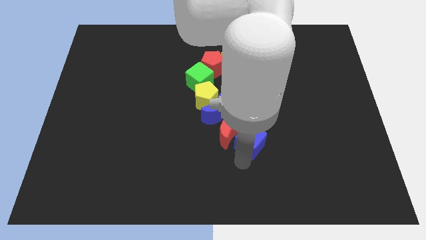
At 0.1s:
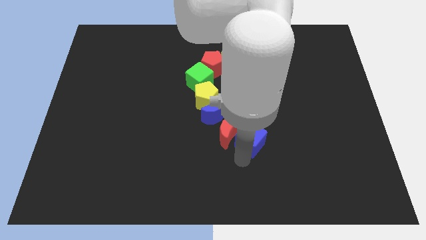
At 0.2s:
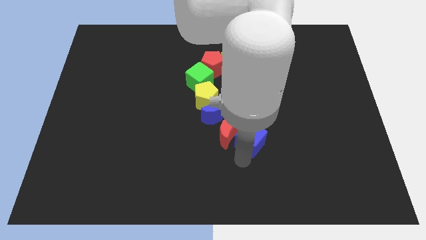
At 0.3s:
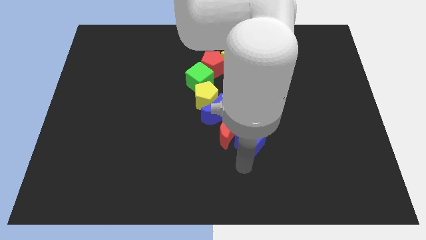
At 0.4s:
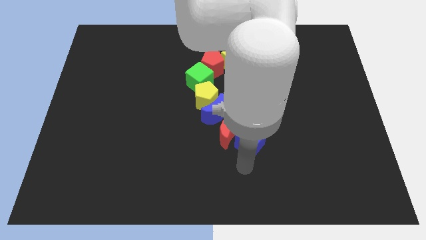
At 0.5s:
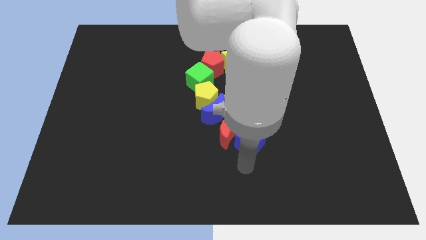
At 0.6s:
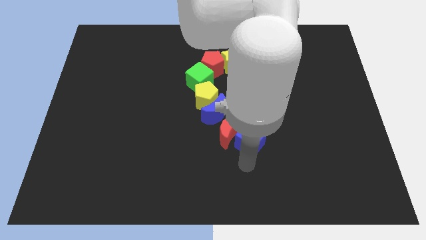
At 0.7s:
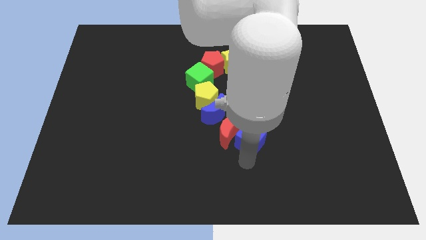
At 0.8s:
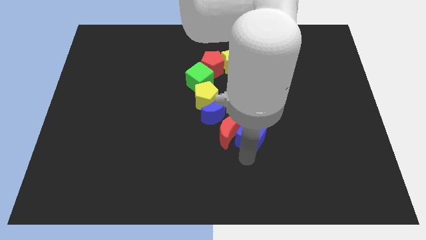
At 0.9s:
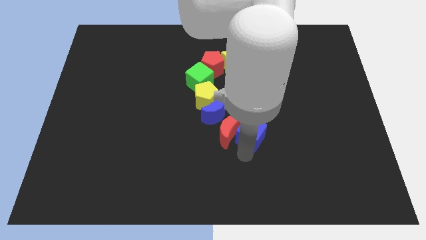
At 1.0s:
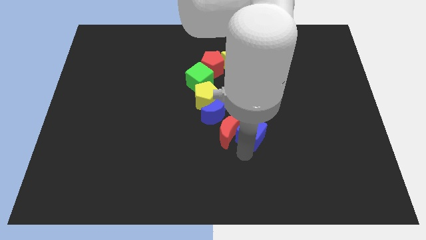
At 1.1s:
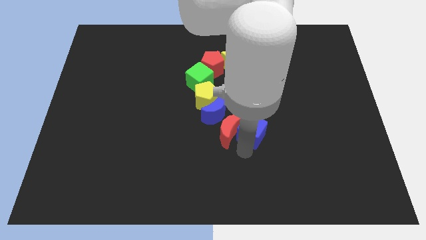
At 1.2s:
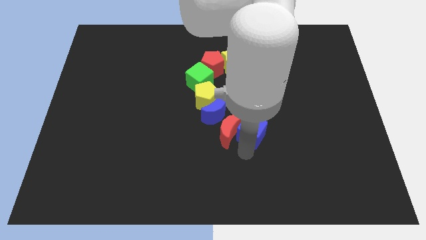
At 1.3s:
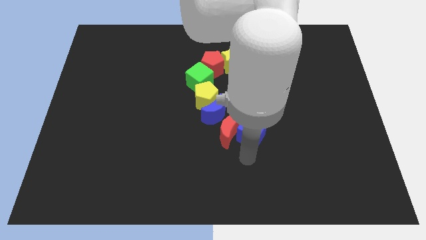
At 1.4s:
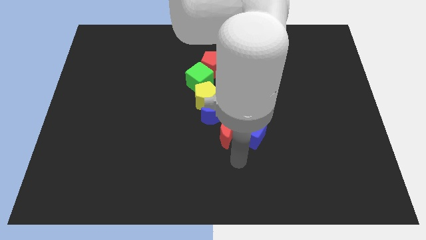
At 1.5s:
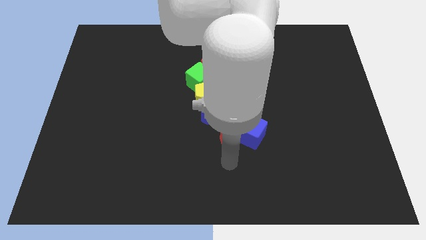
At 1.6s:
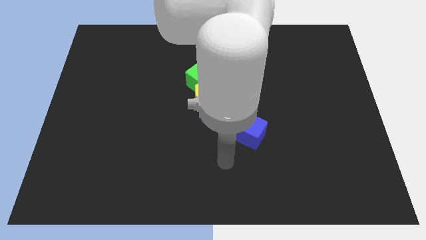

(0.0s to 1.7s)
slightly push the blue cube towards the top side

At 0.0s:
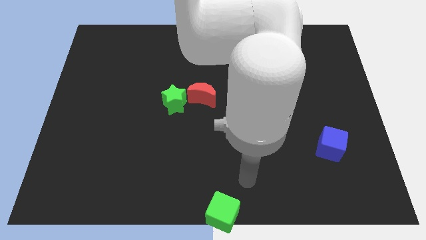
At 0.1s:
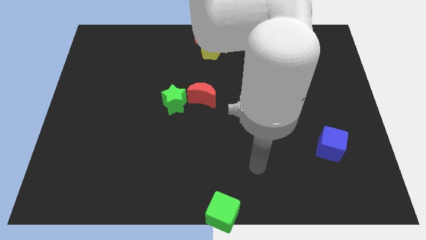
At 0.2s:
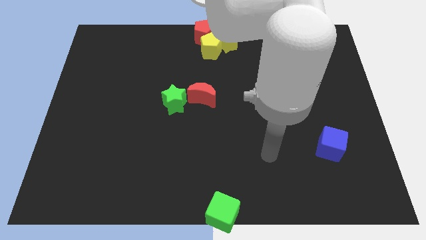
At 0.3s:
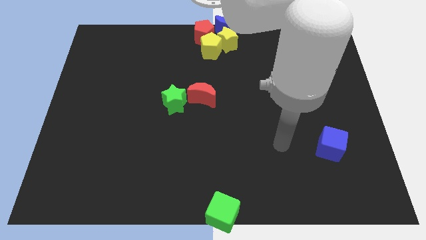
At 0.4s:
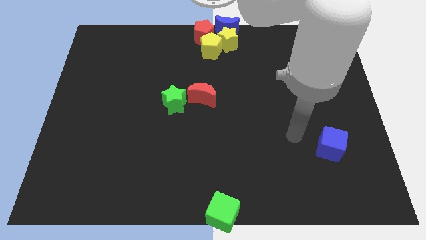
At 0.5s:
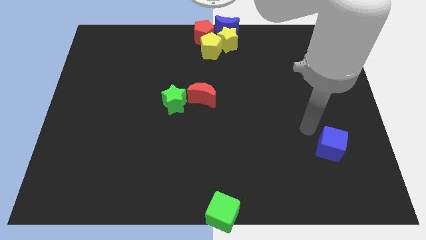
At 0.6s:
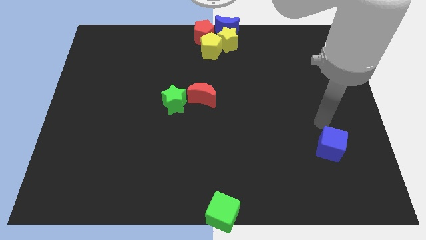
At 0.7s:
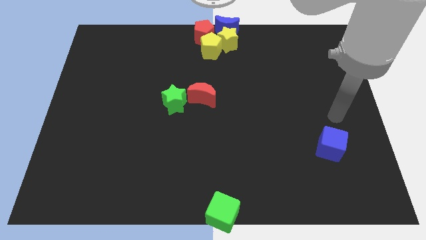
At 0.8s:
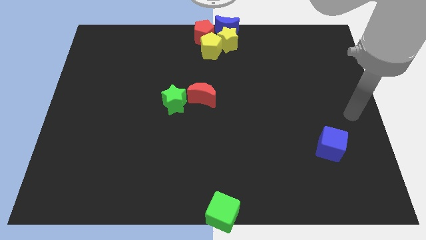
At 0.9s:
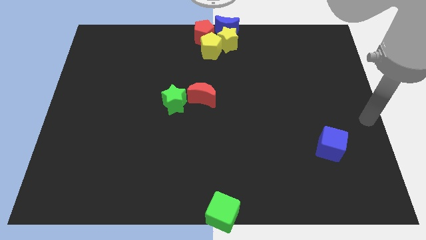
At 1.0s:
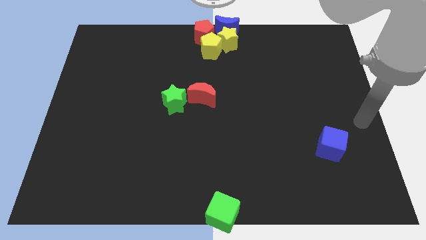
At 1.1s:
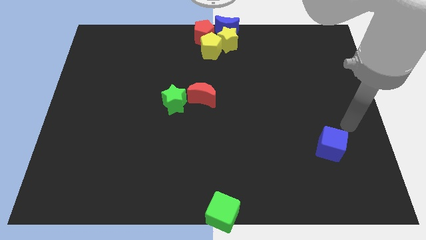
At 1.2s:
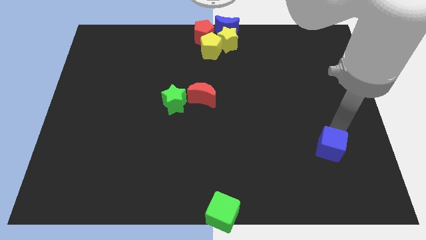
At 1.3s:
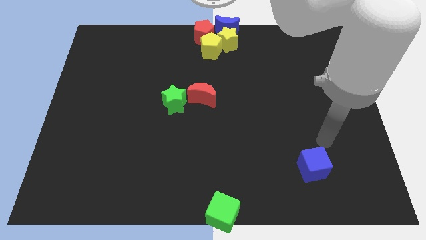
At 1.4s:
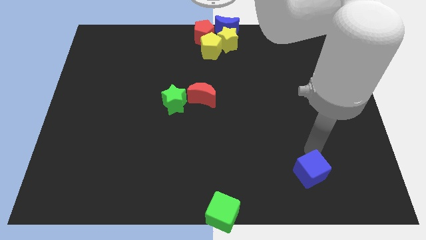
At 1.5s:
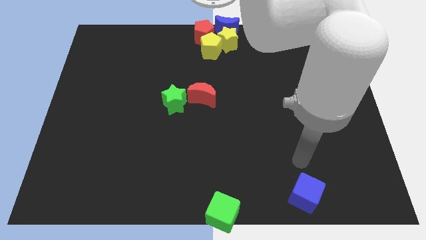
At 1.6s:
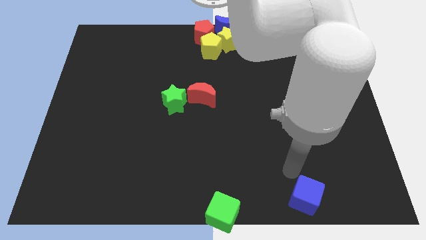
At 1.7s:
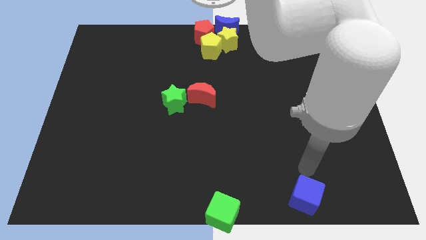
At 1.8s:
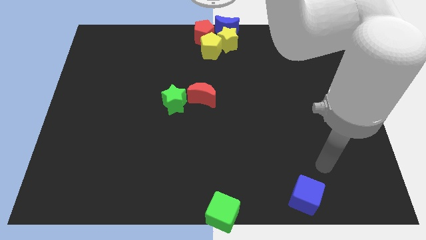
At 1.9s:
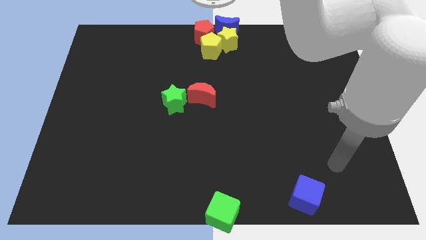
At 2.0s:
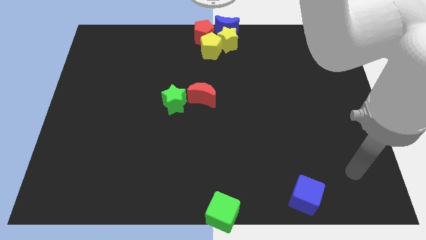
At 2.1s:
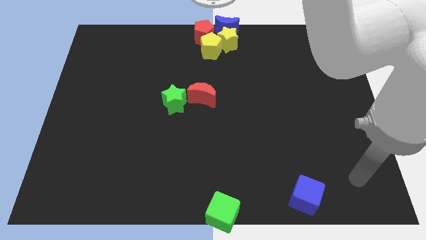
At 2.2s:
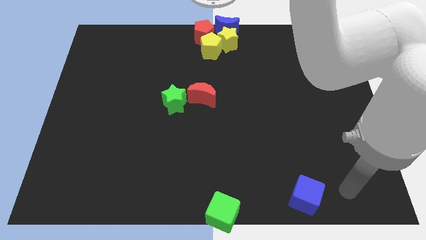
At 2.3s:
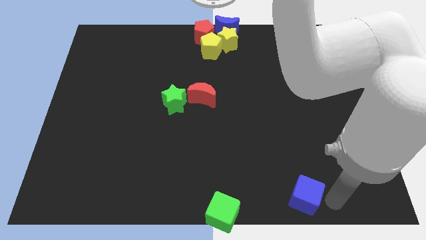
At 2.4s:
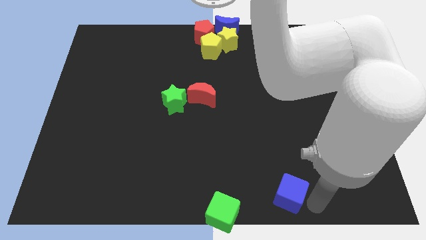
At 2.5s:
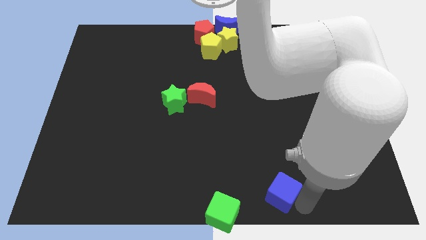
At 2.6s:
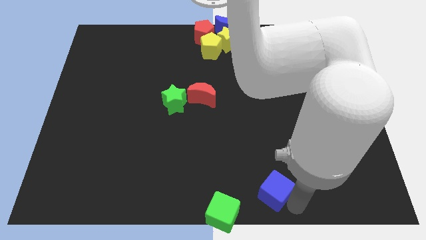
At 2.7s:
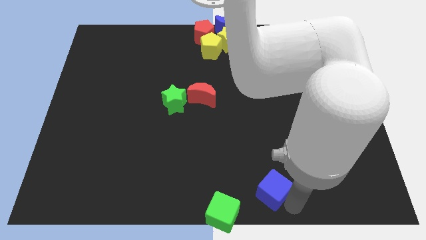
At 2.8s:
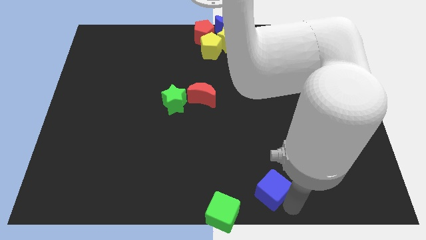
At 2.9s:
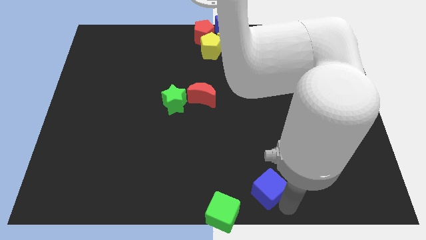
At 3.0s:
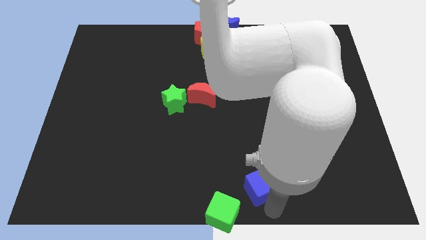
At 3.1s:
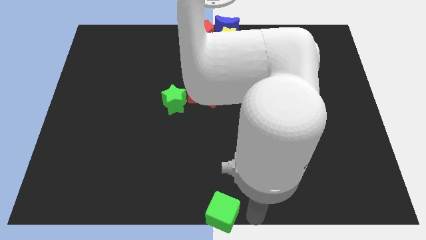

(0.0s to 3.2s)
place the blue cube at the right side of the green cube

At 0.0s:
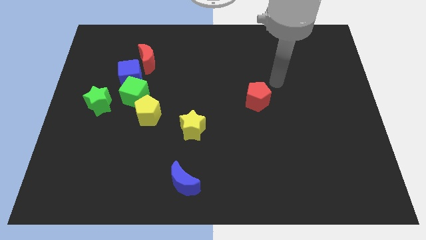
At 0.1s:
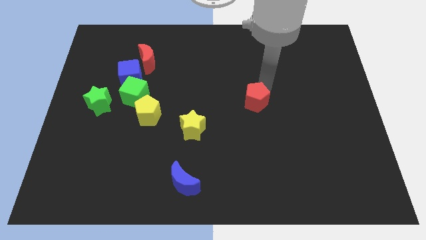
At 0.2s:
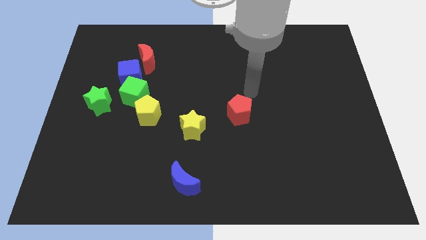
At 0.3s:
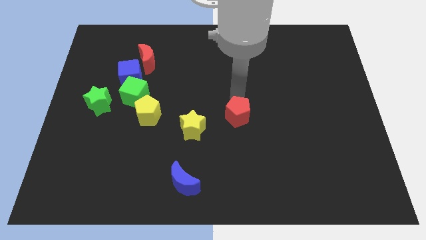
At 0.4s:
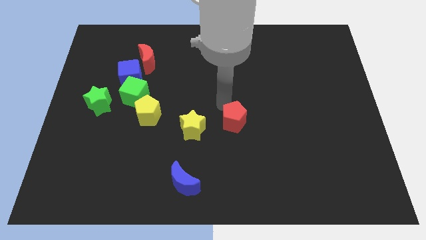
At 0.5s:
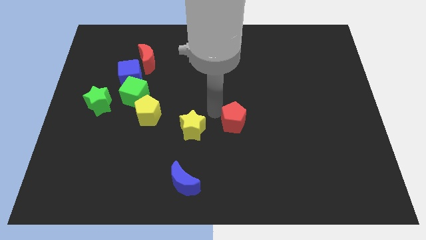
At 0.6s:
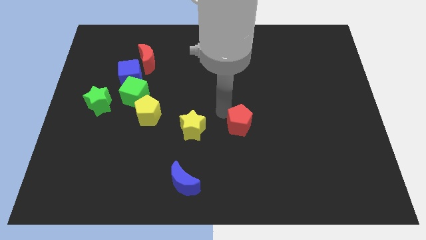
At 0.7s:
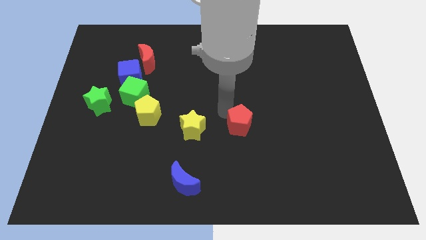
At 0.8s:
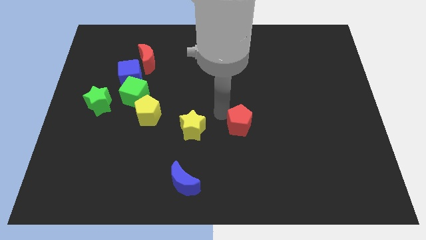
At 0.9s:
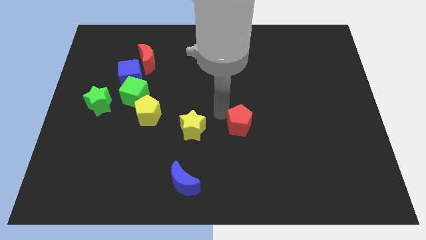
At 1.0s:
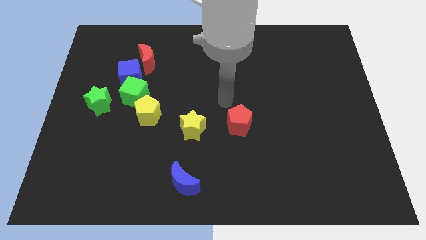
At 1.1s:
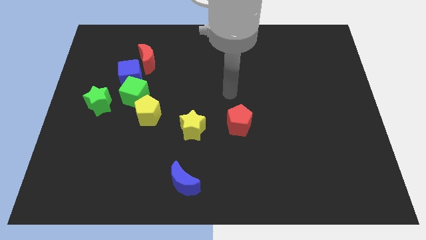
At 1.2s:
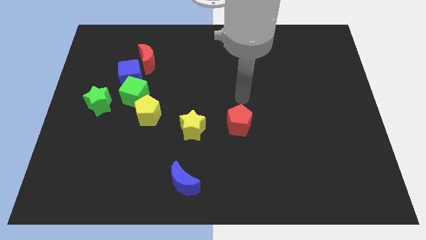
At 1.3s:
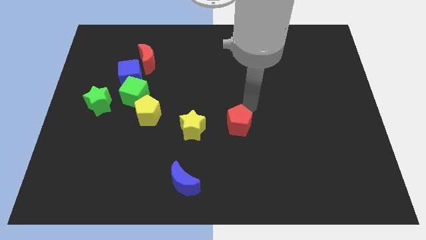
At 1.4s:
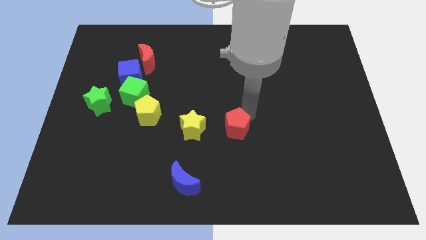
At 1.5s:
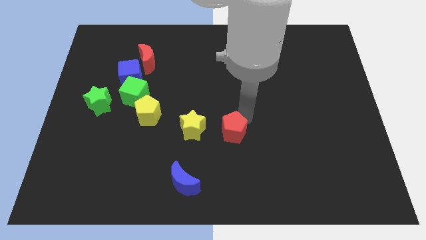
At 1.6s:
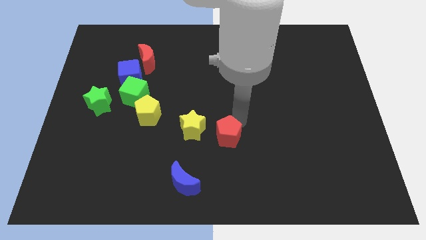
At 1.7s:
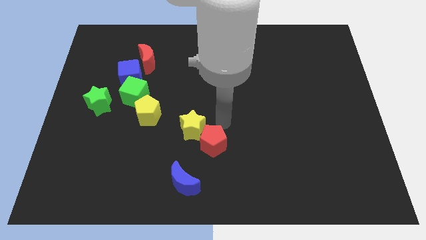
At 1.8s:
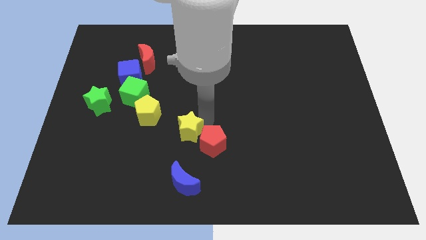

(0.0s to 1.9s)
push the red pentagon close to the yellow star

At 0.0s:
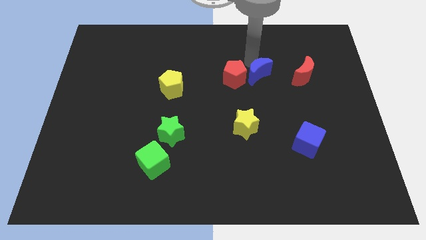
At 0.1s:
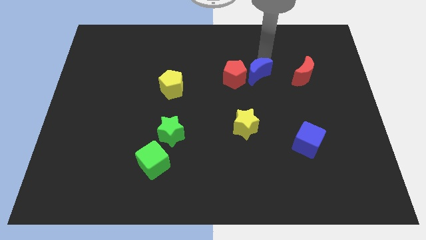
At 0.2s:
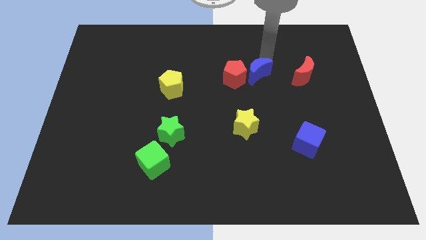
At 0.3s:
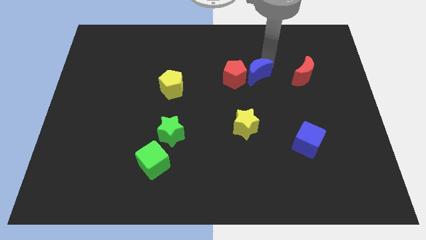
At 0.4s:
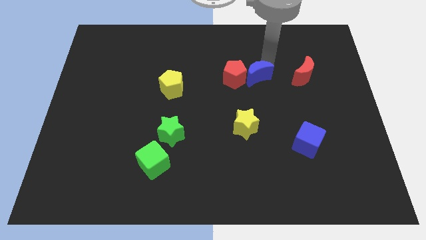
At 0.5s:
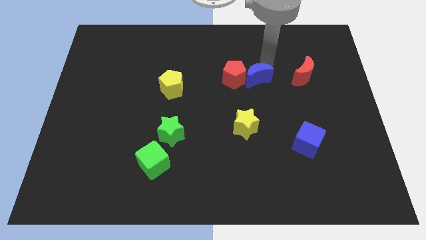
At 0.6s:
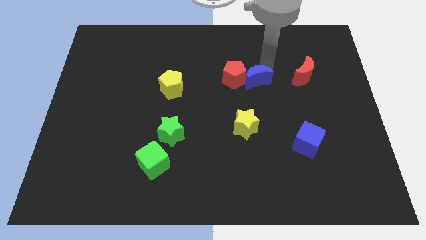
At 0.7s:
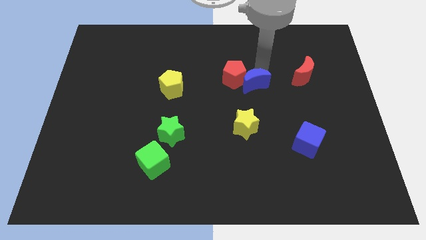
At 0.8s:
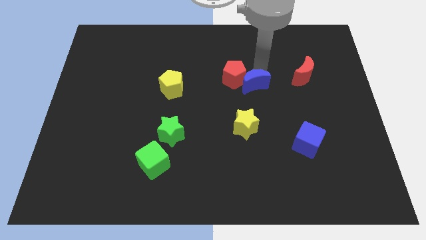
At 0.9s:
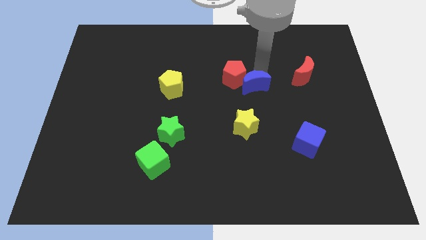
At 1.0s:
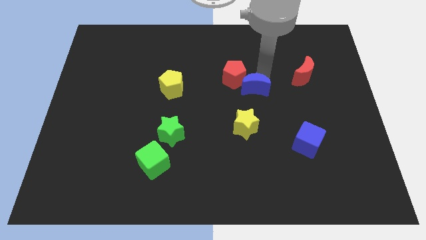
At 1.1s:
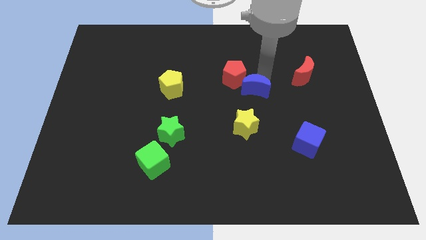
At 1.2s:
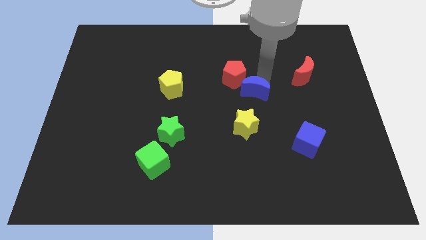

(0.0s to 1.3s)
push the blue moon diagonally bottom right to the red pentagon

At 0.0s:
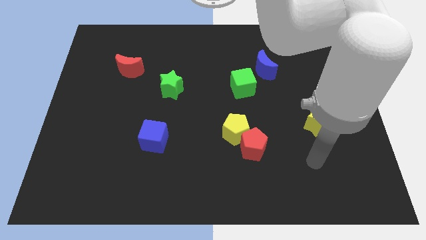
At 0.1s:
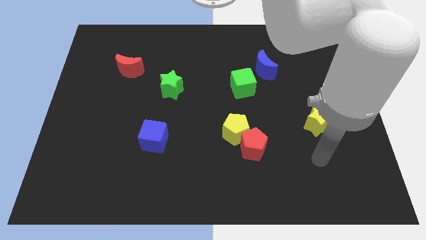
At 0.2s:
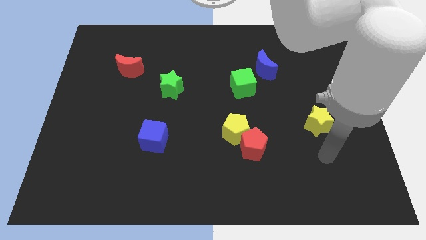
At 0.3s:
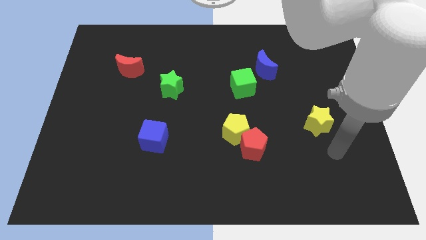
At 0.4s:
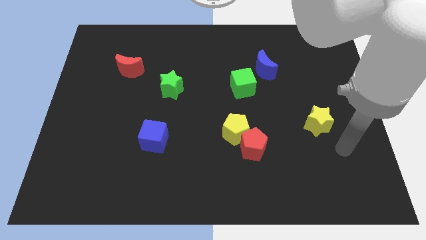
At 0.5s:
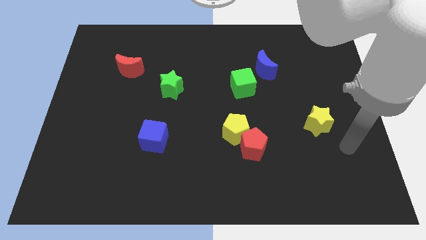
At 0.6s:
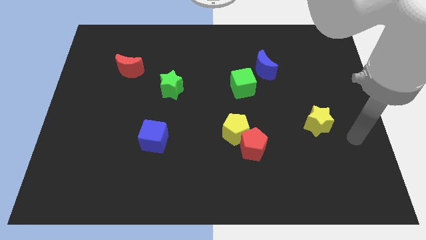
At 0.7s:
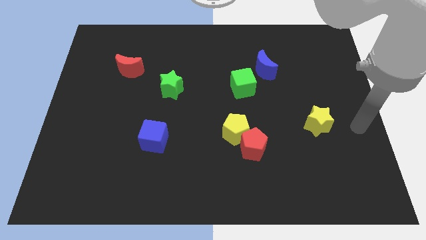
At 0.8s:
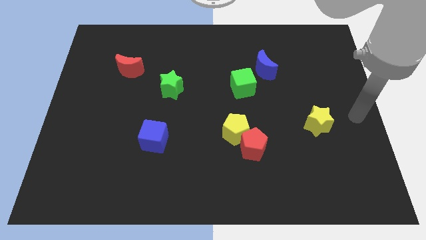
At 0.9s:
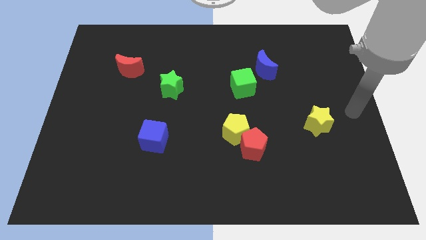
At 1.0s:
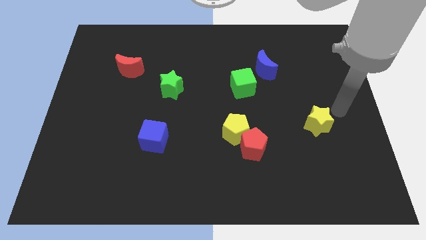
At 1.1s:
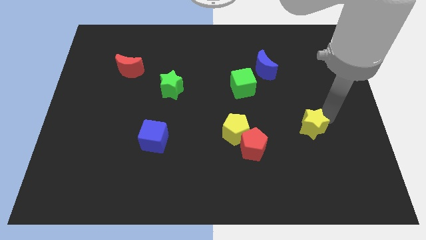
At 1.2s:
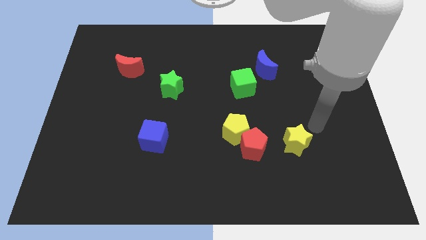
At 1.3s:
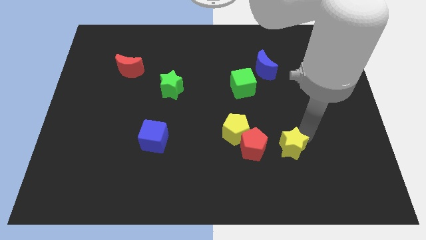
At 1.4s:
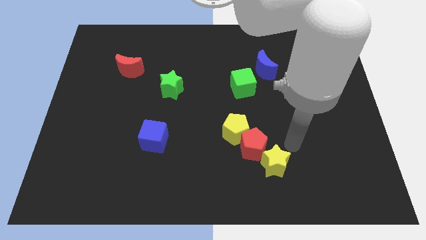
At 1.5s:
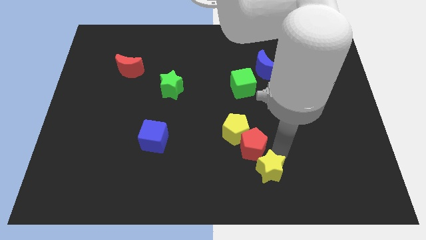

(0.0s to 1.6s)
drag the yellow star to the bottom right side of the red pentagon
